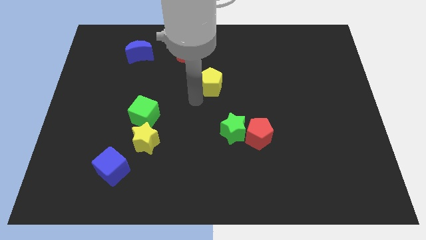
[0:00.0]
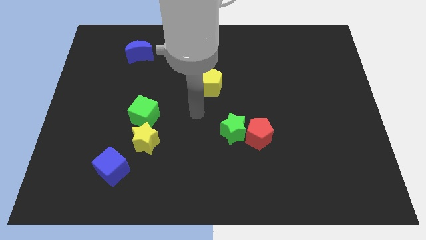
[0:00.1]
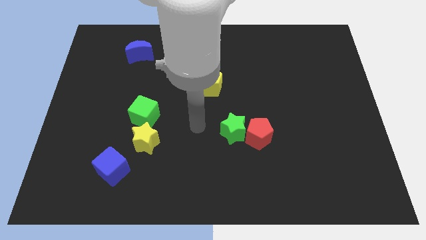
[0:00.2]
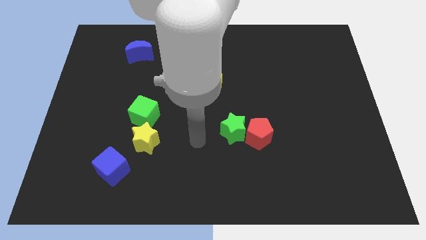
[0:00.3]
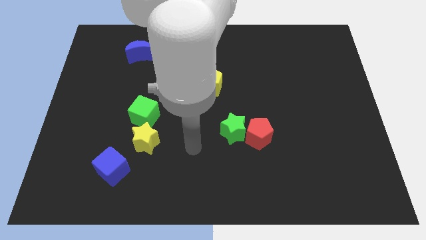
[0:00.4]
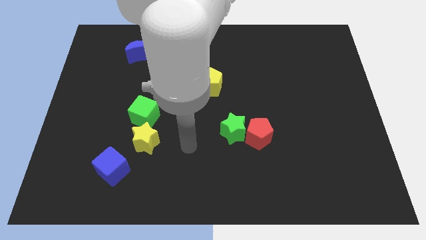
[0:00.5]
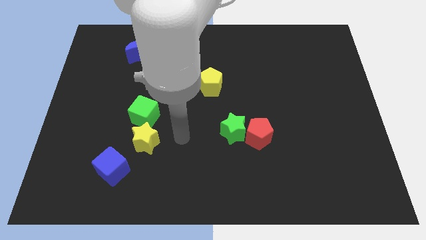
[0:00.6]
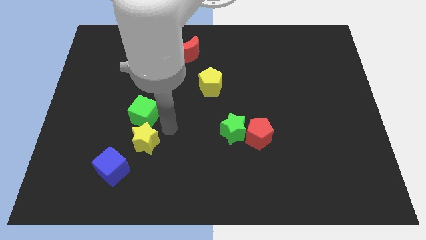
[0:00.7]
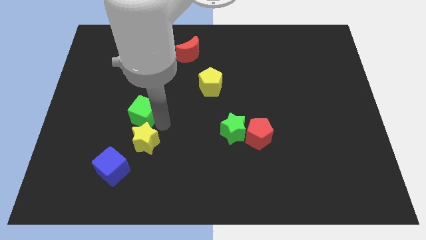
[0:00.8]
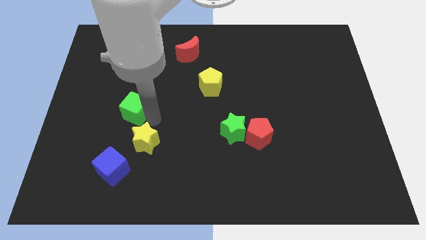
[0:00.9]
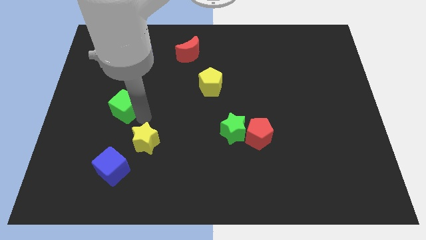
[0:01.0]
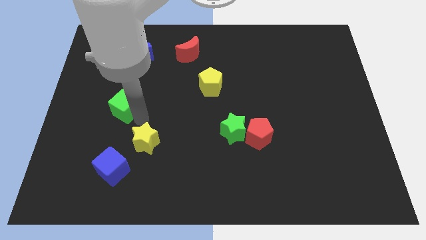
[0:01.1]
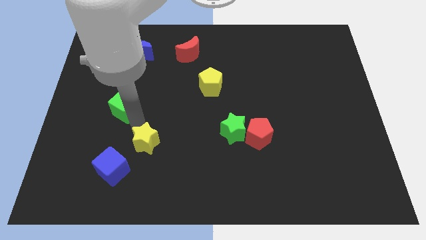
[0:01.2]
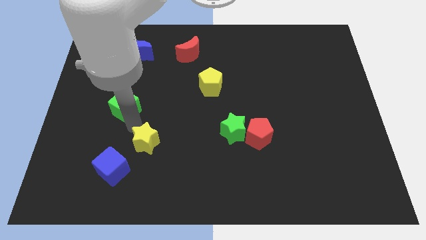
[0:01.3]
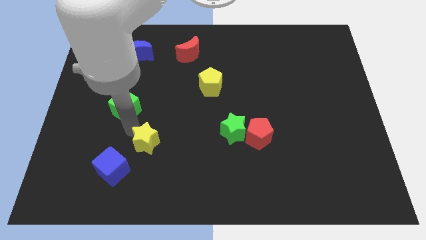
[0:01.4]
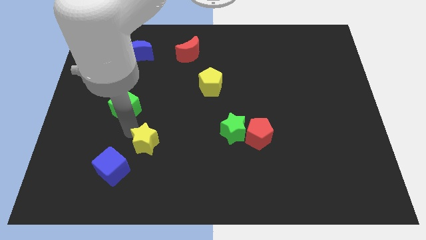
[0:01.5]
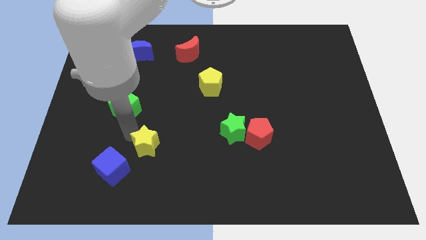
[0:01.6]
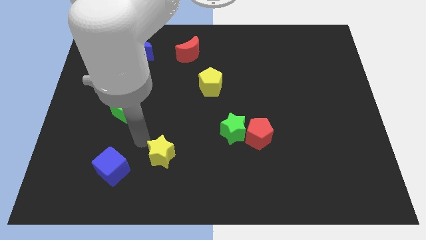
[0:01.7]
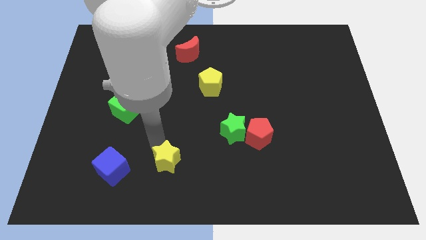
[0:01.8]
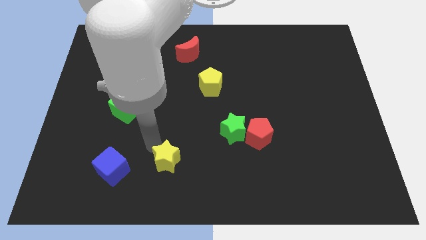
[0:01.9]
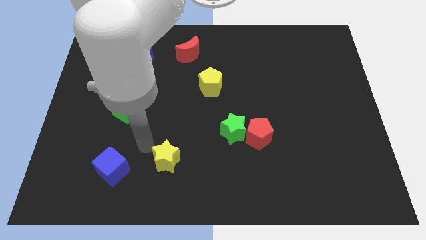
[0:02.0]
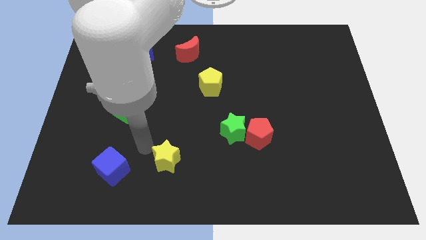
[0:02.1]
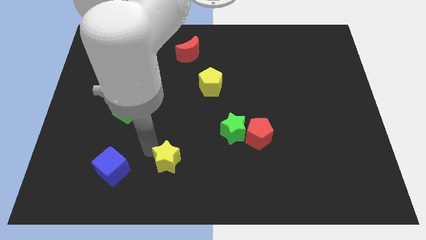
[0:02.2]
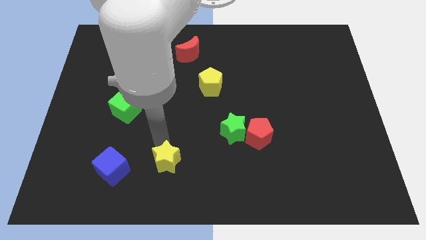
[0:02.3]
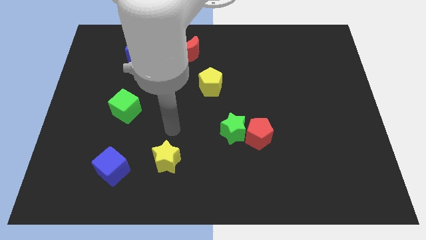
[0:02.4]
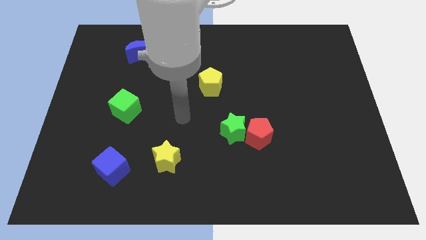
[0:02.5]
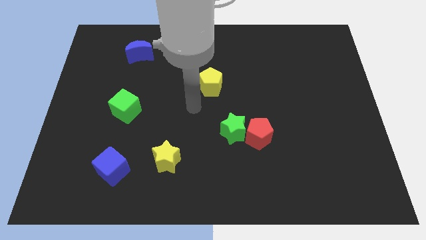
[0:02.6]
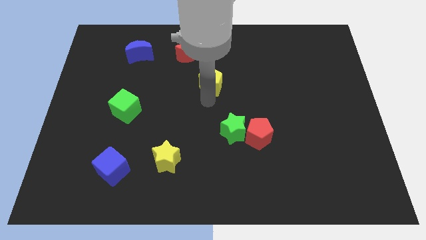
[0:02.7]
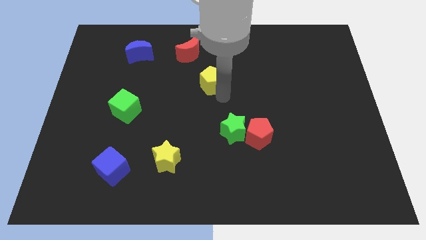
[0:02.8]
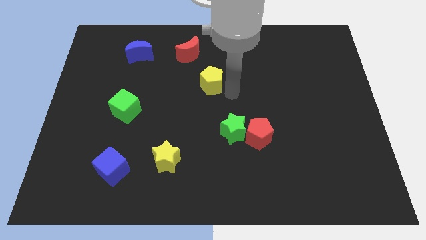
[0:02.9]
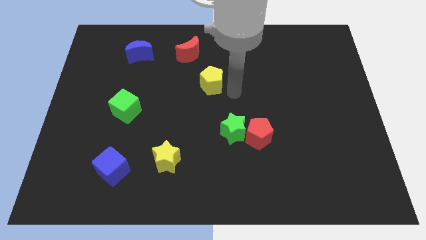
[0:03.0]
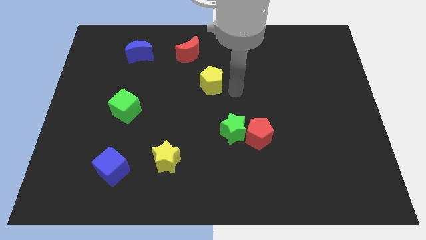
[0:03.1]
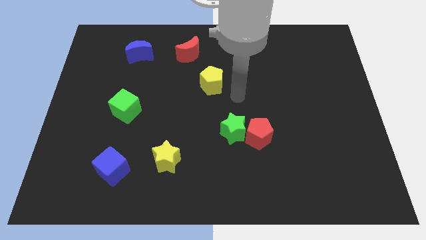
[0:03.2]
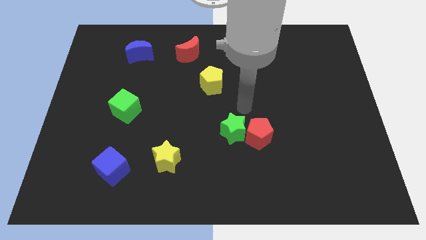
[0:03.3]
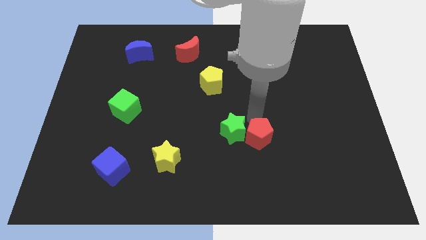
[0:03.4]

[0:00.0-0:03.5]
separate the green cube and yellow star

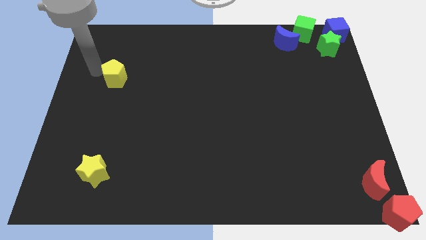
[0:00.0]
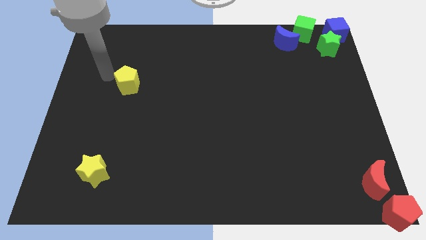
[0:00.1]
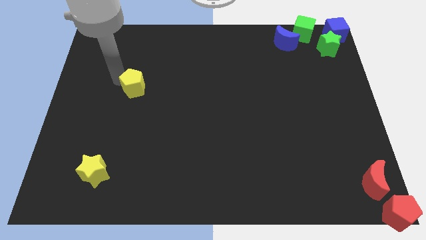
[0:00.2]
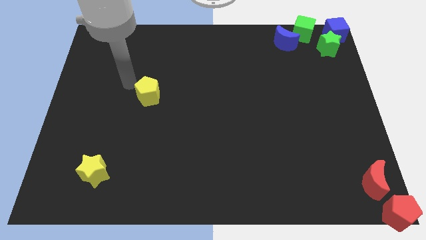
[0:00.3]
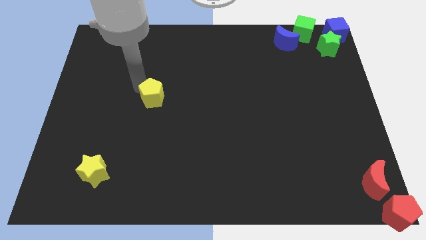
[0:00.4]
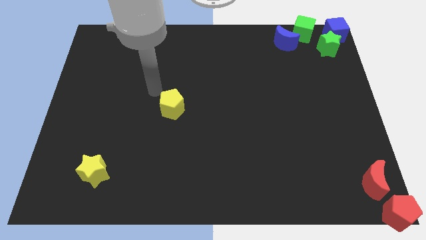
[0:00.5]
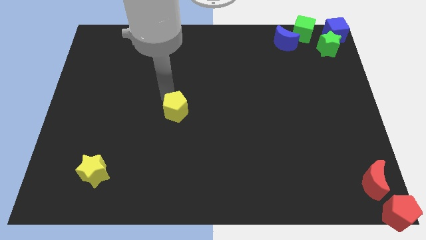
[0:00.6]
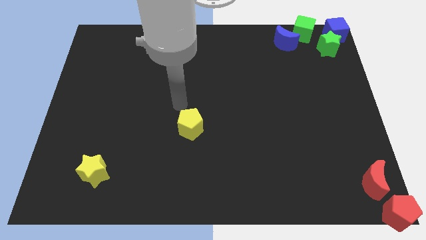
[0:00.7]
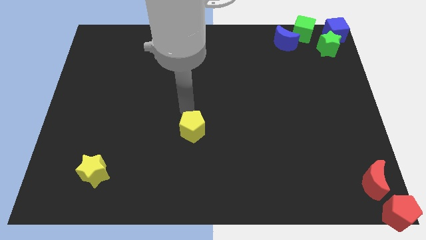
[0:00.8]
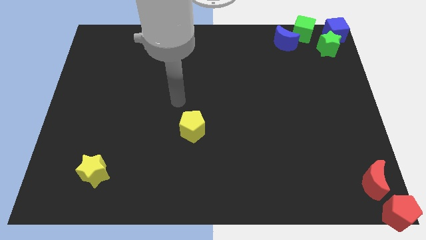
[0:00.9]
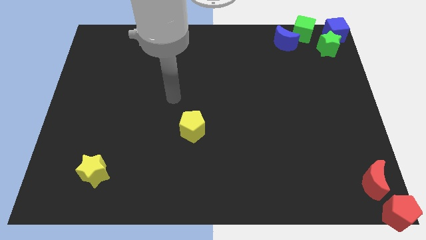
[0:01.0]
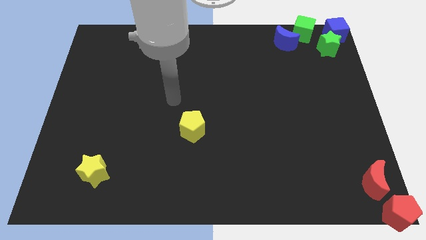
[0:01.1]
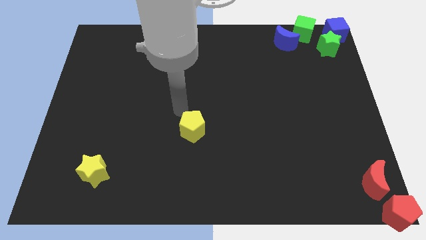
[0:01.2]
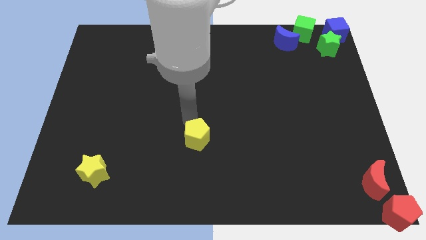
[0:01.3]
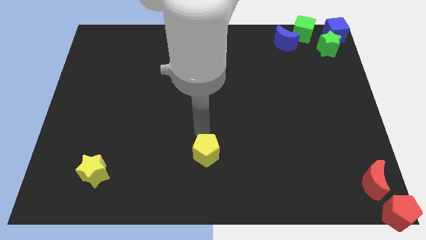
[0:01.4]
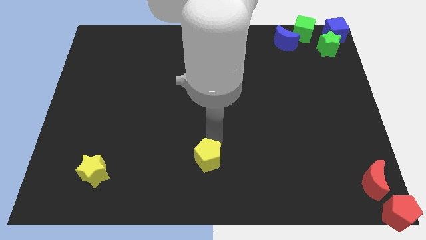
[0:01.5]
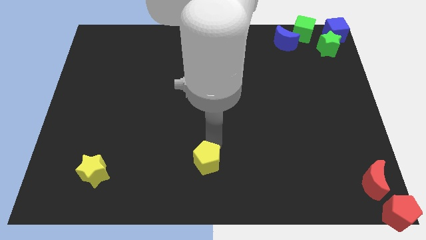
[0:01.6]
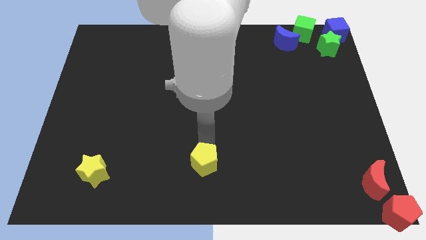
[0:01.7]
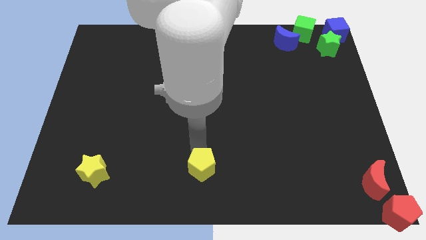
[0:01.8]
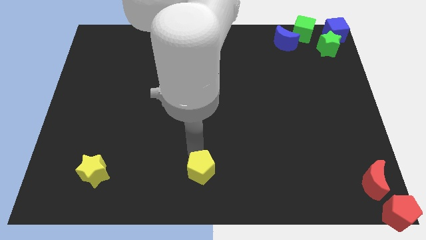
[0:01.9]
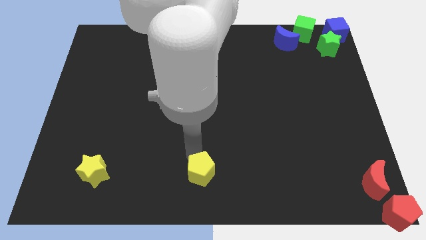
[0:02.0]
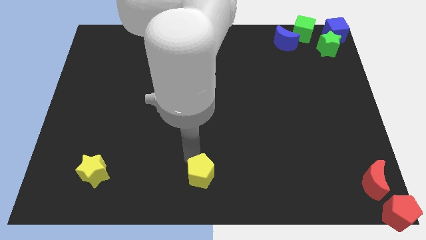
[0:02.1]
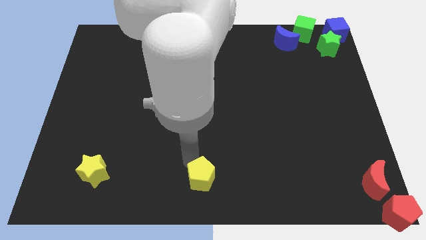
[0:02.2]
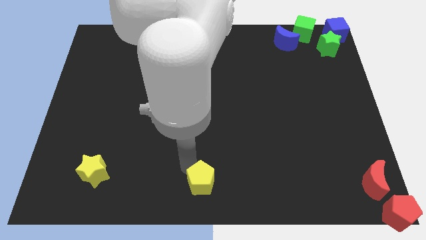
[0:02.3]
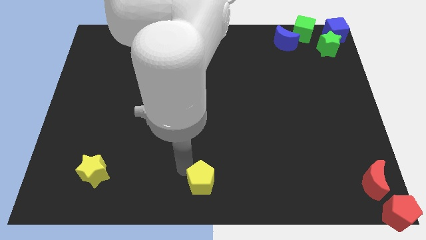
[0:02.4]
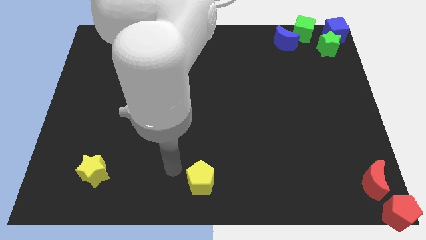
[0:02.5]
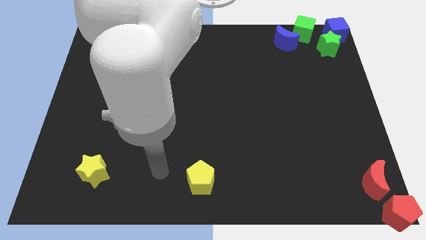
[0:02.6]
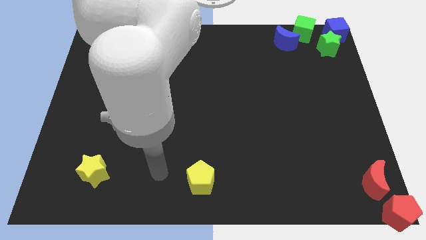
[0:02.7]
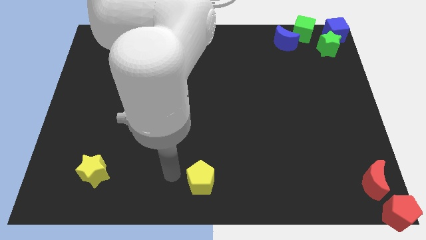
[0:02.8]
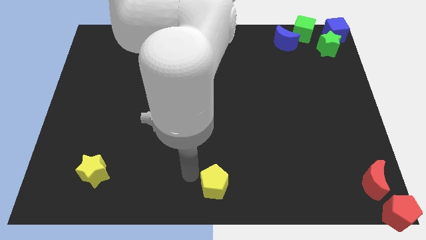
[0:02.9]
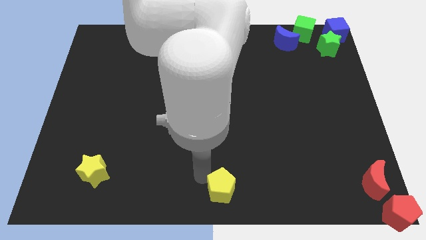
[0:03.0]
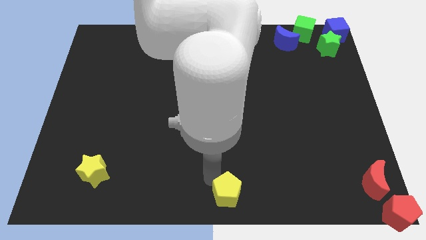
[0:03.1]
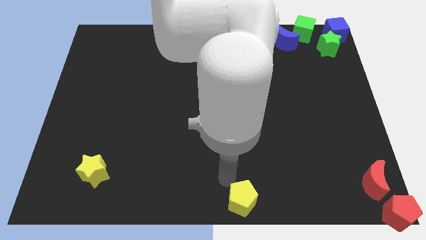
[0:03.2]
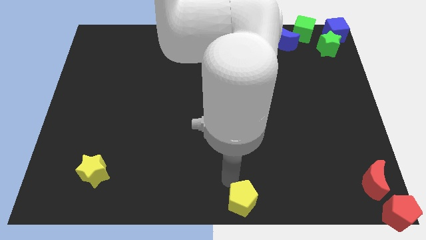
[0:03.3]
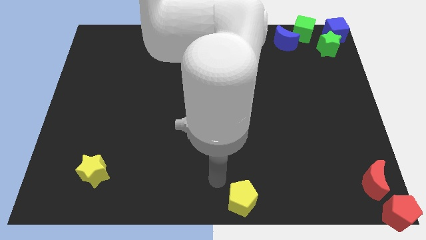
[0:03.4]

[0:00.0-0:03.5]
move the yellow pentagon to the bottom center

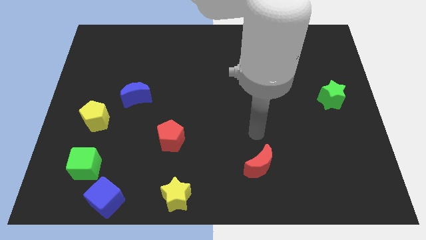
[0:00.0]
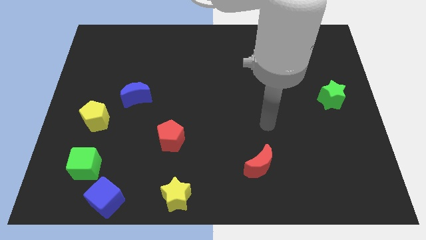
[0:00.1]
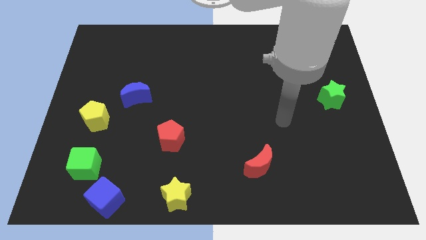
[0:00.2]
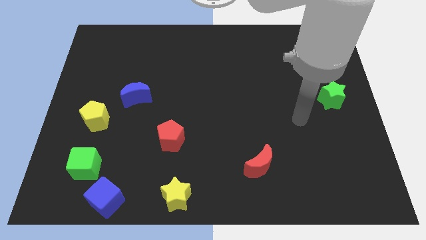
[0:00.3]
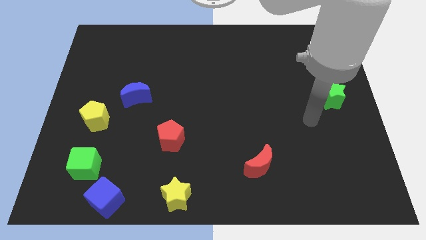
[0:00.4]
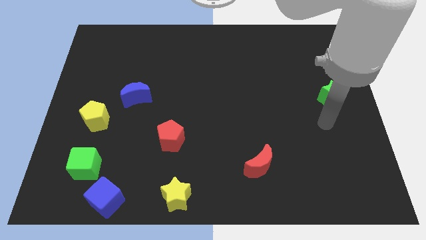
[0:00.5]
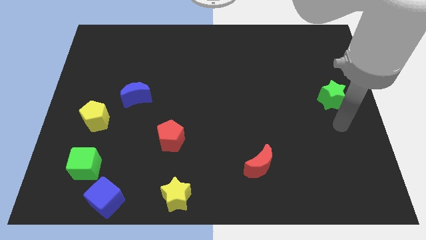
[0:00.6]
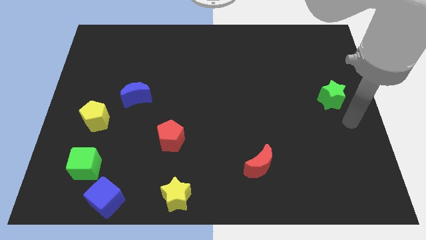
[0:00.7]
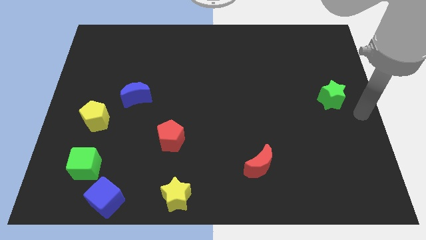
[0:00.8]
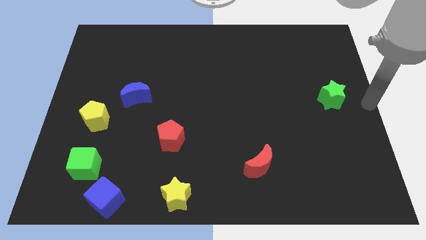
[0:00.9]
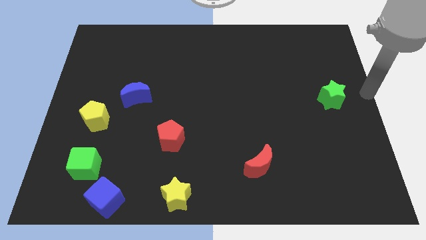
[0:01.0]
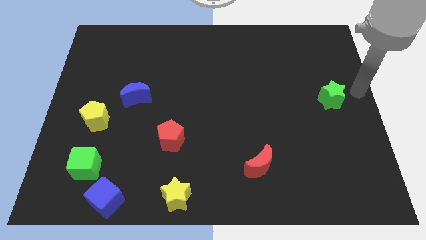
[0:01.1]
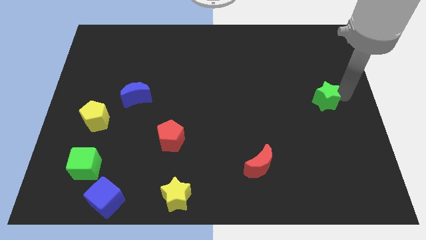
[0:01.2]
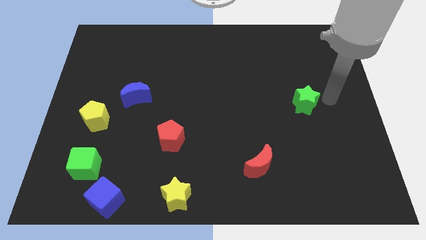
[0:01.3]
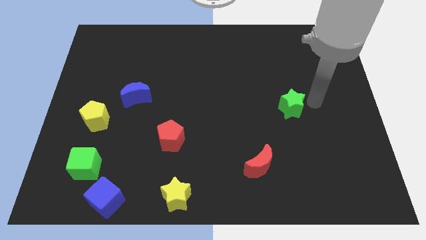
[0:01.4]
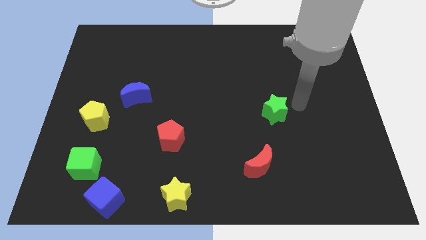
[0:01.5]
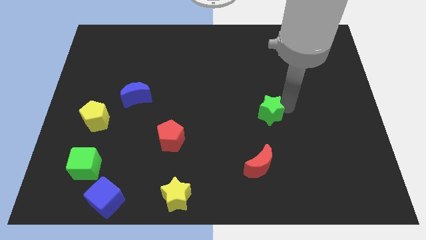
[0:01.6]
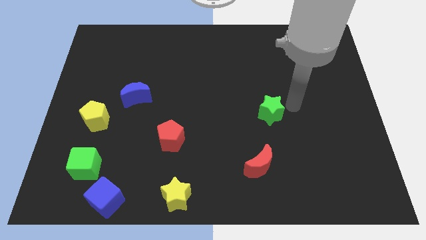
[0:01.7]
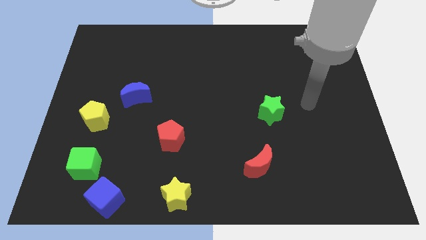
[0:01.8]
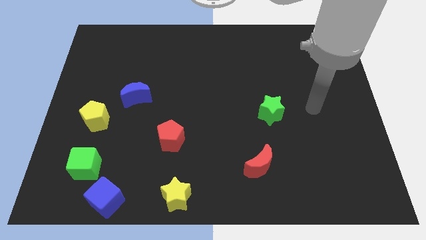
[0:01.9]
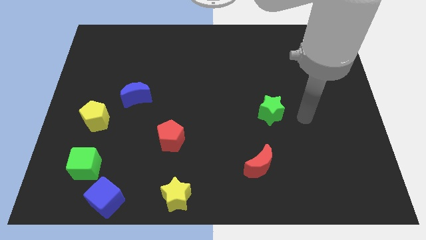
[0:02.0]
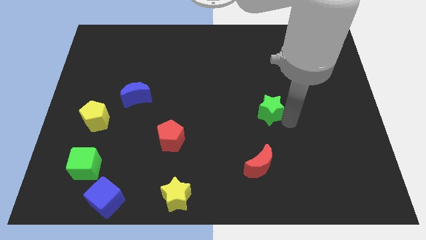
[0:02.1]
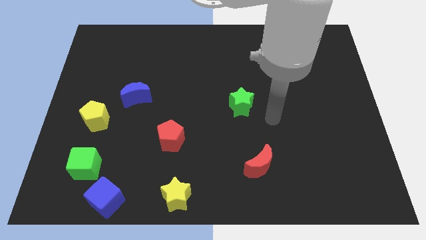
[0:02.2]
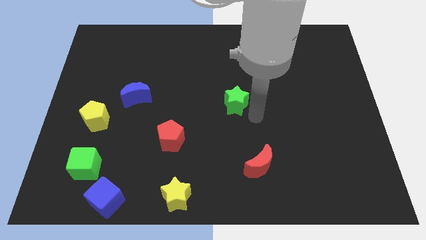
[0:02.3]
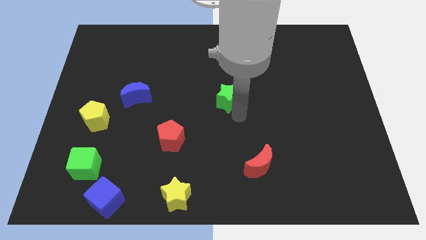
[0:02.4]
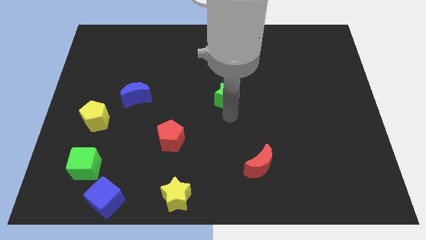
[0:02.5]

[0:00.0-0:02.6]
move the green star to the center of the board
